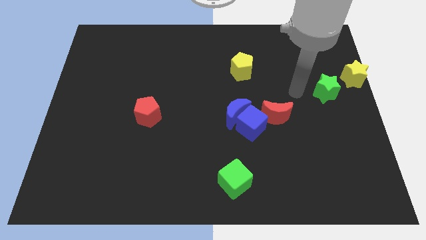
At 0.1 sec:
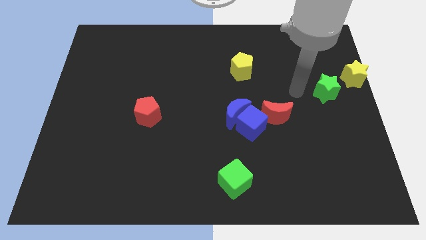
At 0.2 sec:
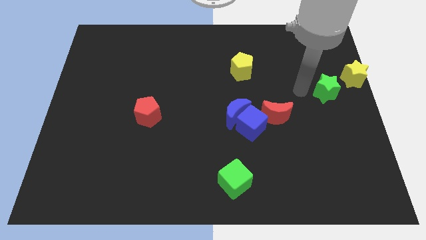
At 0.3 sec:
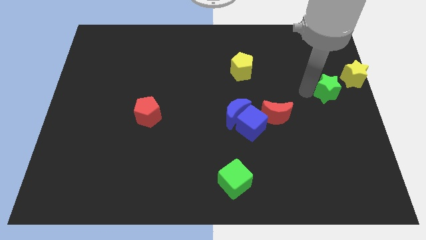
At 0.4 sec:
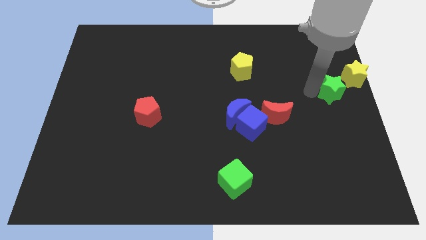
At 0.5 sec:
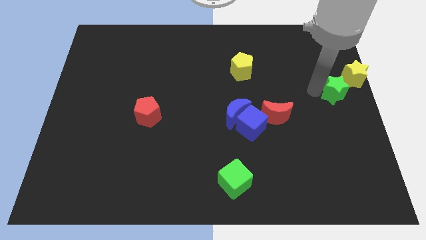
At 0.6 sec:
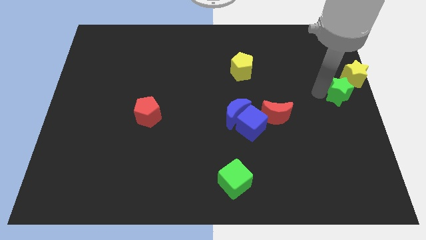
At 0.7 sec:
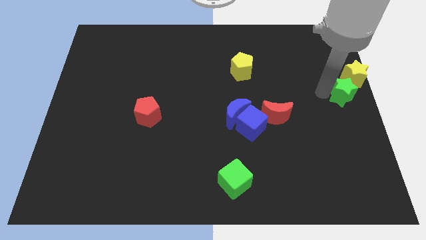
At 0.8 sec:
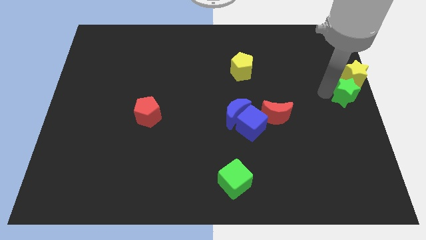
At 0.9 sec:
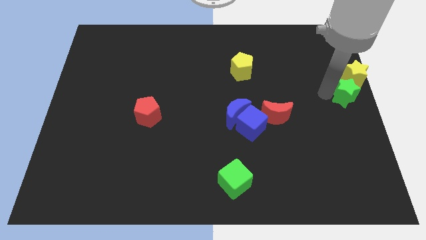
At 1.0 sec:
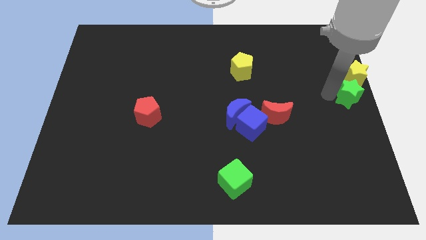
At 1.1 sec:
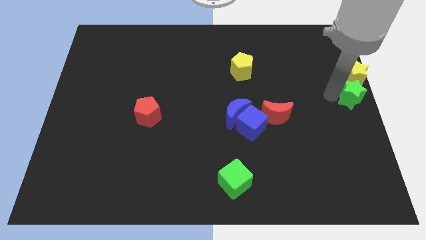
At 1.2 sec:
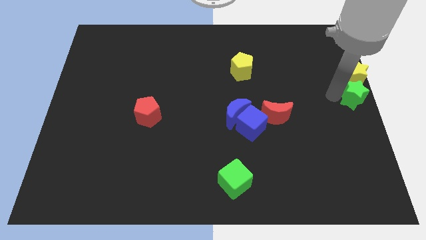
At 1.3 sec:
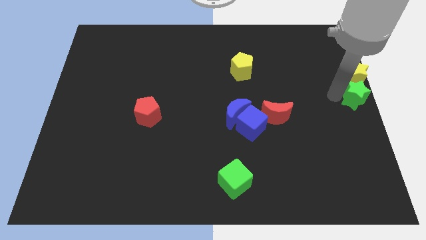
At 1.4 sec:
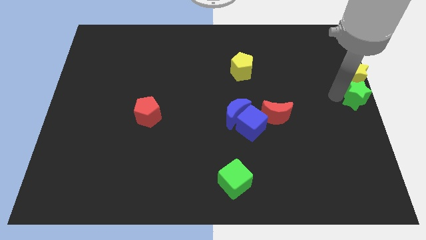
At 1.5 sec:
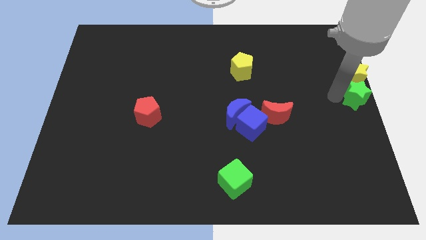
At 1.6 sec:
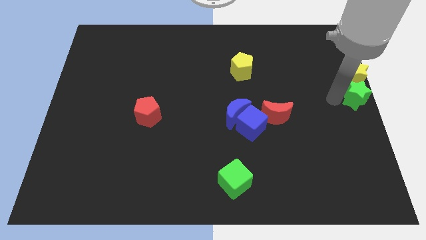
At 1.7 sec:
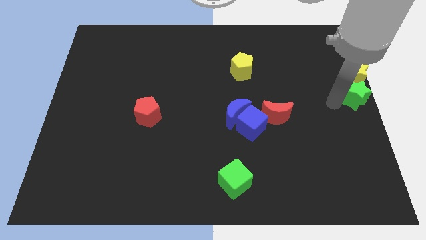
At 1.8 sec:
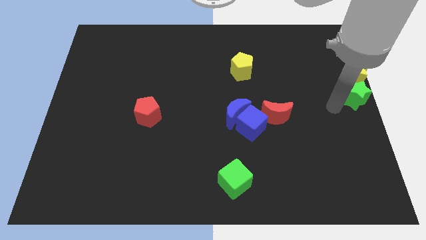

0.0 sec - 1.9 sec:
push the green star to the bottom of the yellow star

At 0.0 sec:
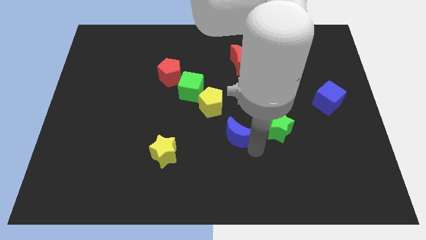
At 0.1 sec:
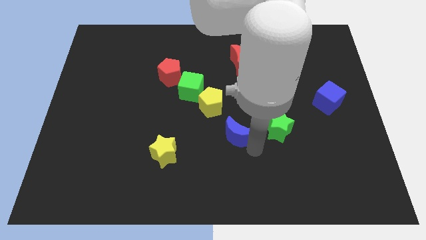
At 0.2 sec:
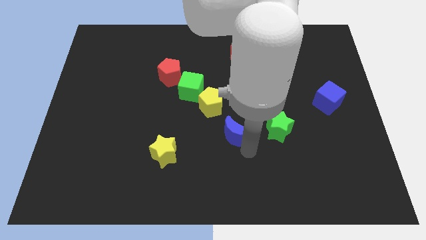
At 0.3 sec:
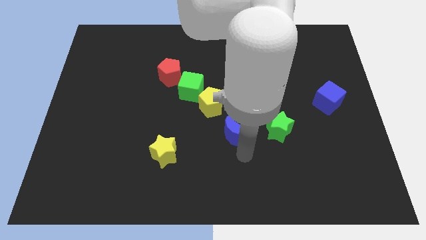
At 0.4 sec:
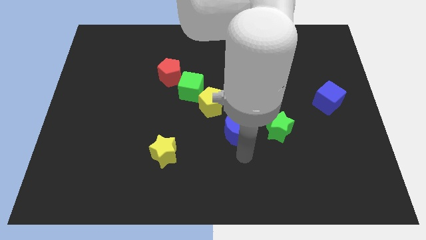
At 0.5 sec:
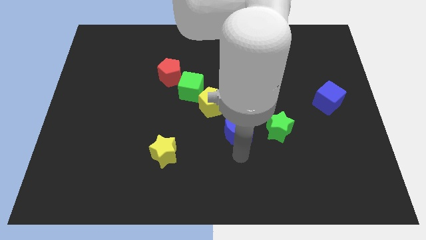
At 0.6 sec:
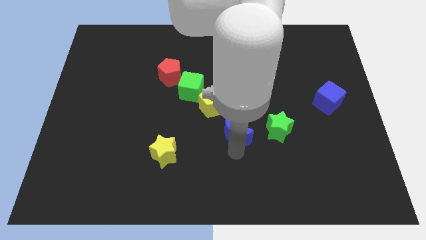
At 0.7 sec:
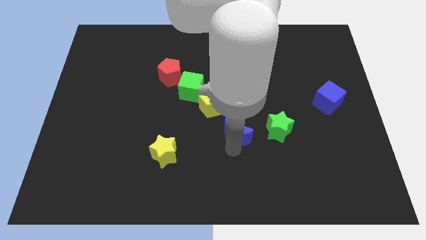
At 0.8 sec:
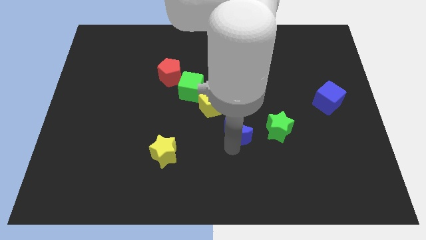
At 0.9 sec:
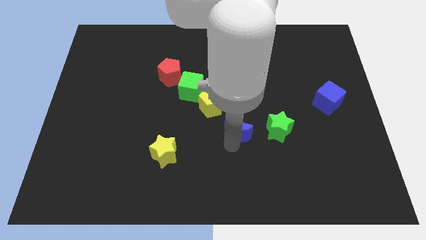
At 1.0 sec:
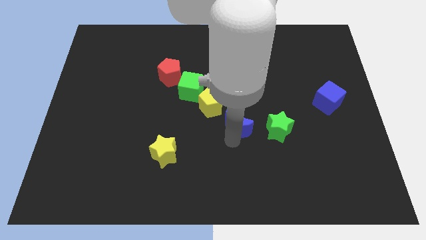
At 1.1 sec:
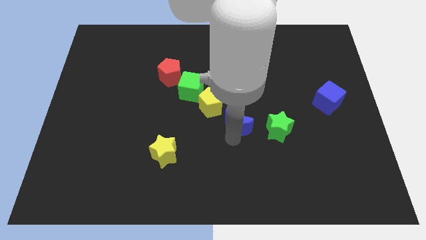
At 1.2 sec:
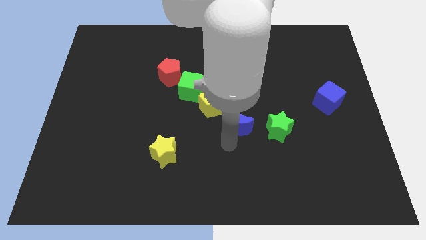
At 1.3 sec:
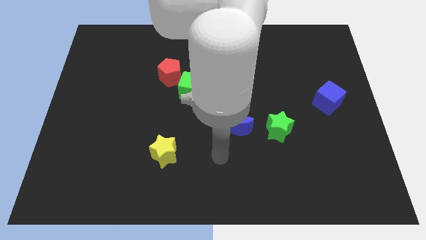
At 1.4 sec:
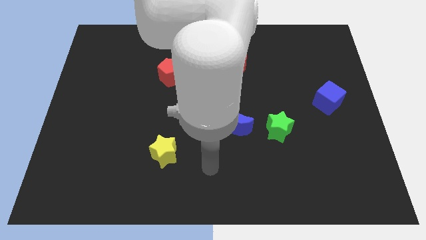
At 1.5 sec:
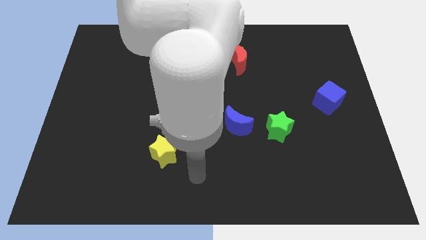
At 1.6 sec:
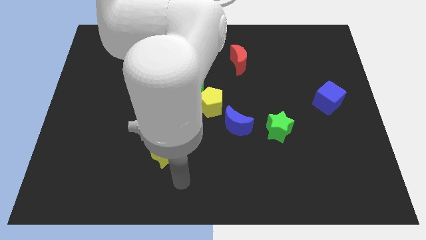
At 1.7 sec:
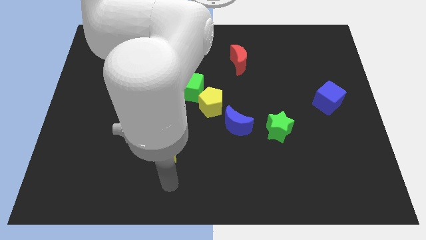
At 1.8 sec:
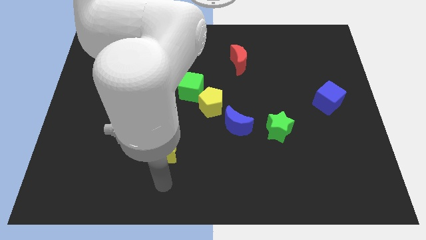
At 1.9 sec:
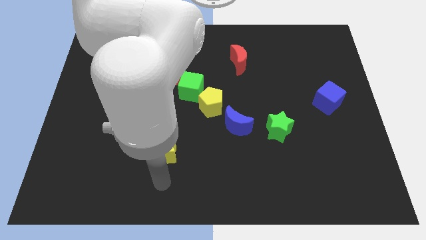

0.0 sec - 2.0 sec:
place the blue moon to the bottom right of the yellow pentagon

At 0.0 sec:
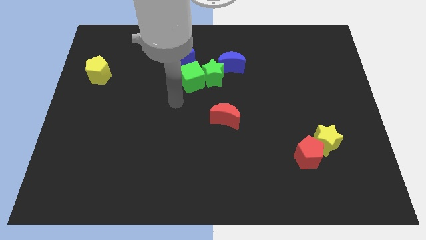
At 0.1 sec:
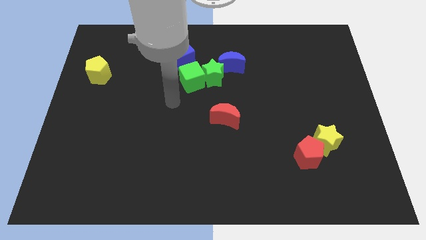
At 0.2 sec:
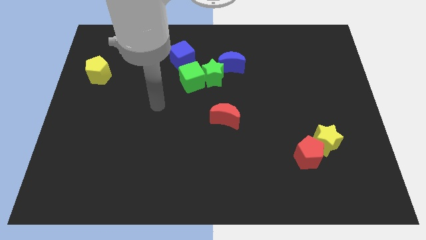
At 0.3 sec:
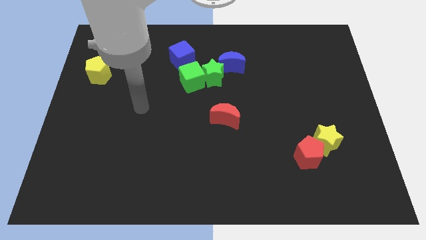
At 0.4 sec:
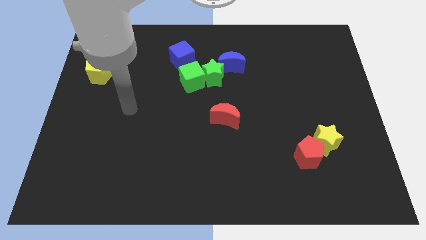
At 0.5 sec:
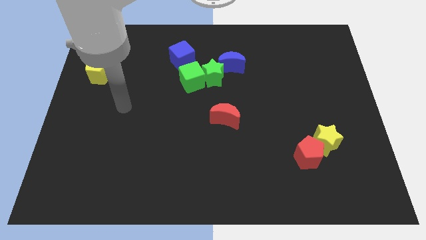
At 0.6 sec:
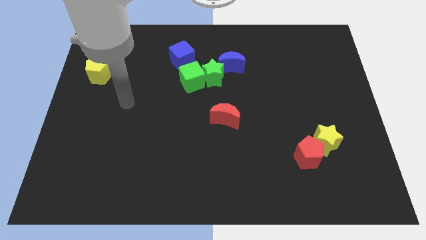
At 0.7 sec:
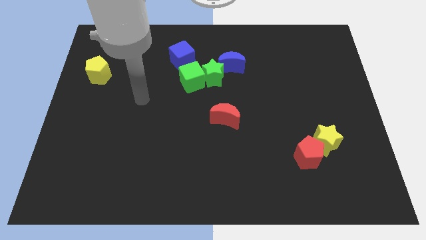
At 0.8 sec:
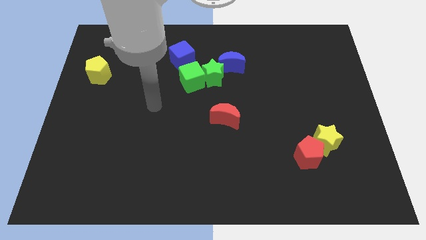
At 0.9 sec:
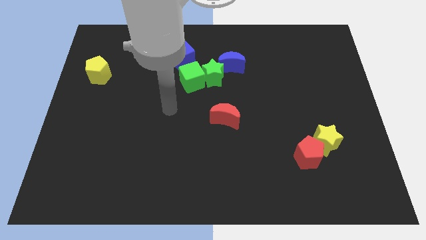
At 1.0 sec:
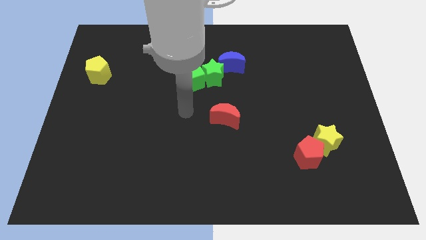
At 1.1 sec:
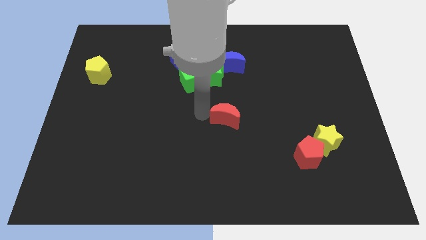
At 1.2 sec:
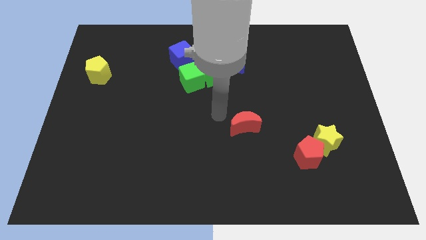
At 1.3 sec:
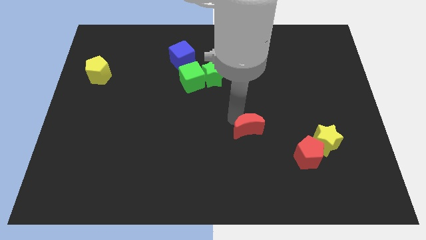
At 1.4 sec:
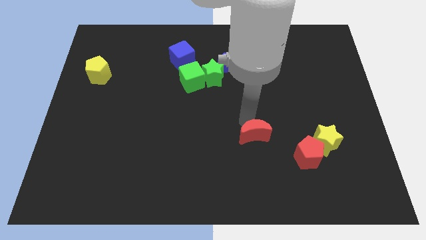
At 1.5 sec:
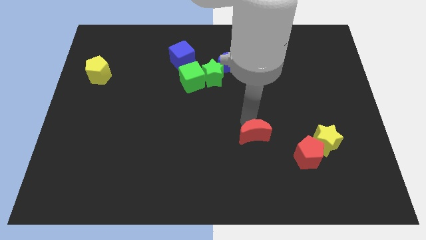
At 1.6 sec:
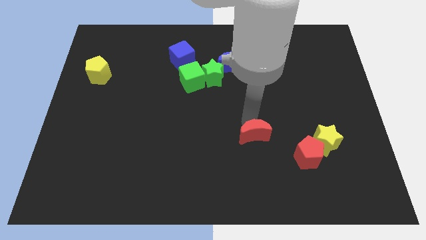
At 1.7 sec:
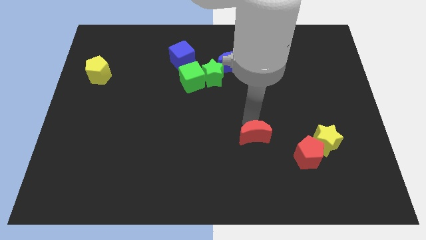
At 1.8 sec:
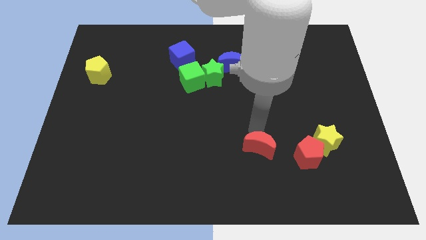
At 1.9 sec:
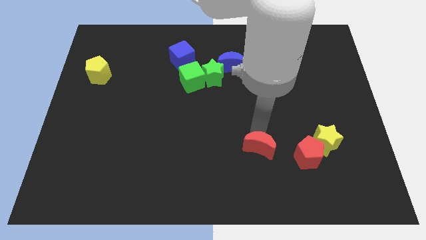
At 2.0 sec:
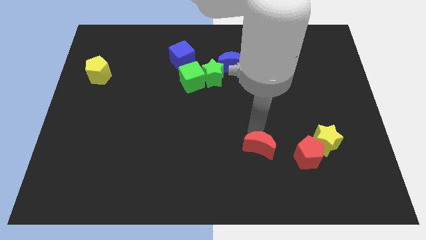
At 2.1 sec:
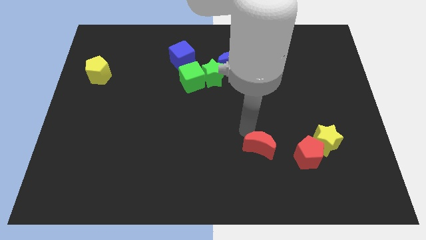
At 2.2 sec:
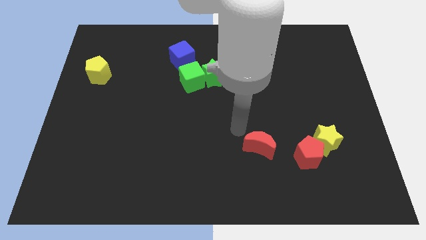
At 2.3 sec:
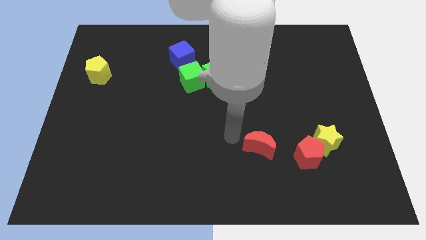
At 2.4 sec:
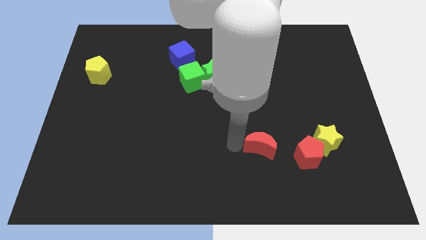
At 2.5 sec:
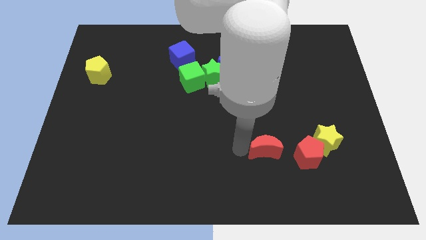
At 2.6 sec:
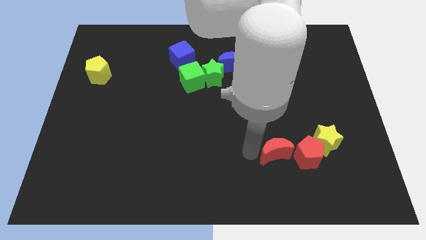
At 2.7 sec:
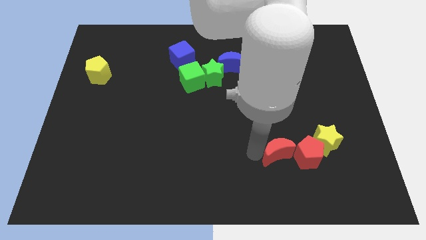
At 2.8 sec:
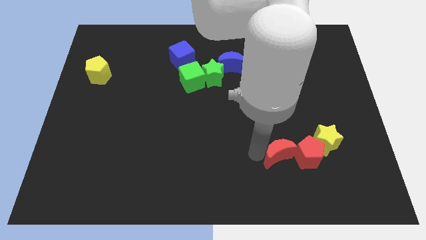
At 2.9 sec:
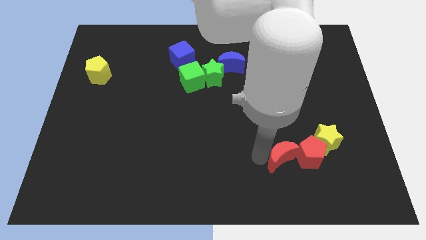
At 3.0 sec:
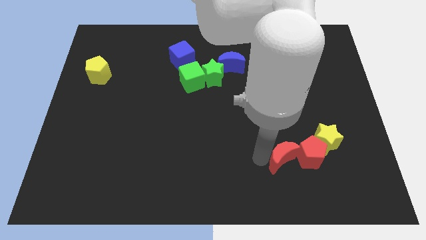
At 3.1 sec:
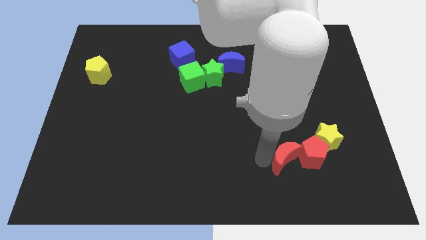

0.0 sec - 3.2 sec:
push the red moon into the red pentagon

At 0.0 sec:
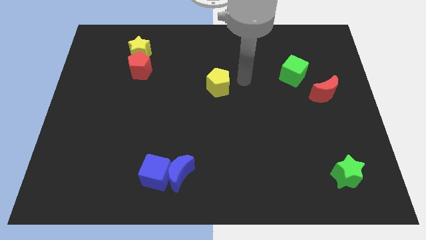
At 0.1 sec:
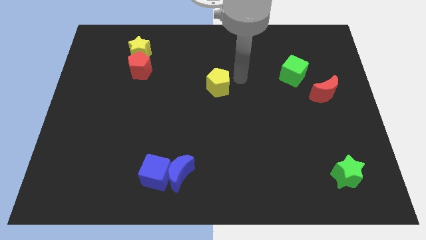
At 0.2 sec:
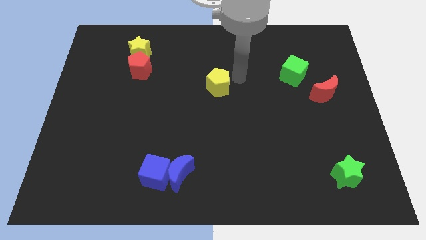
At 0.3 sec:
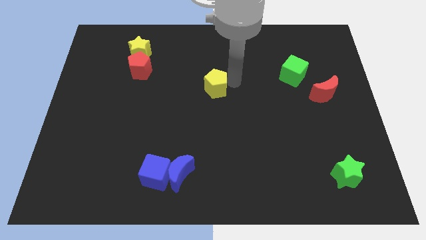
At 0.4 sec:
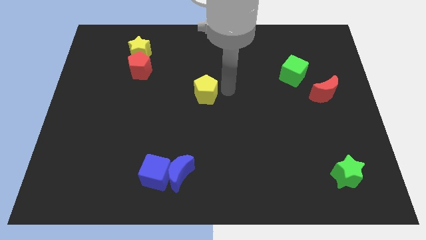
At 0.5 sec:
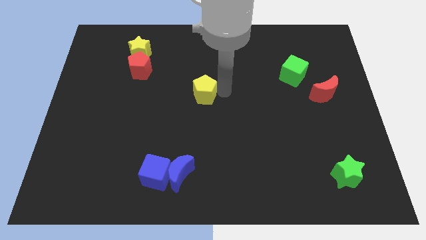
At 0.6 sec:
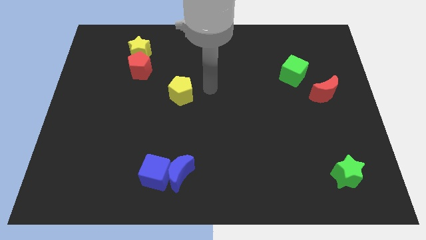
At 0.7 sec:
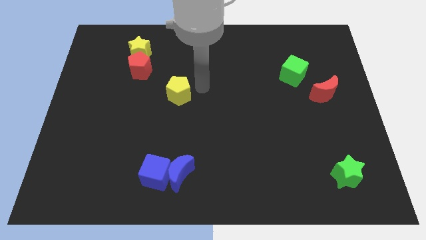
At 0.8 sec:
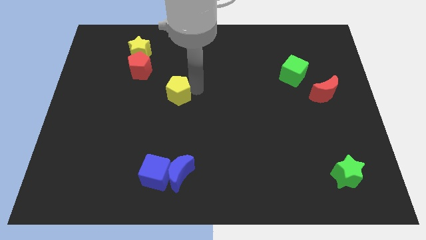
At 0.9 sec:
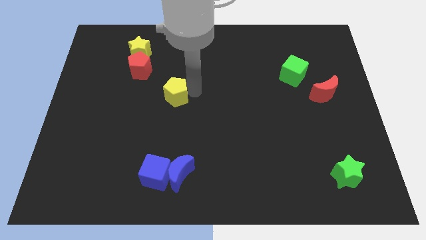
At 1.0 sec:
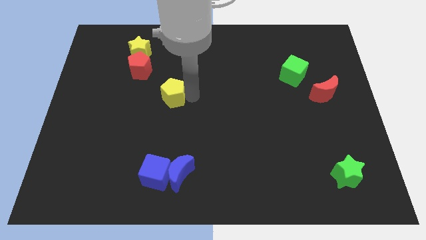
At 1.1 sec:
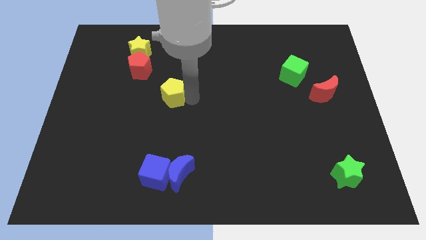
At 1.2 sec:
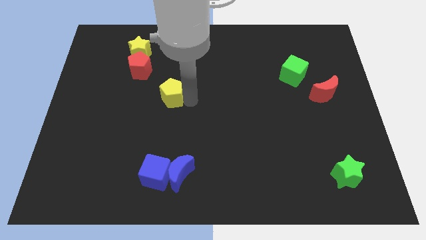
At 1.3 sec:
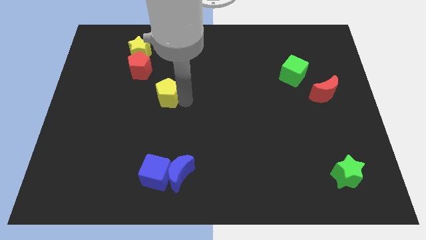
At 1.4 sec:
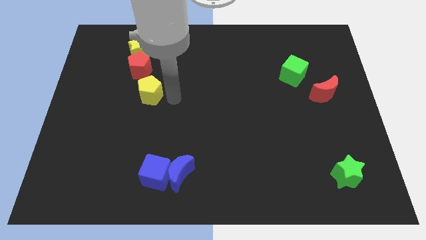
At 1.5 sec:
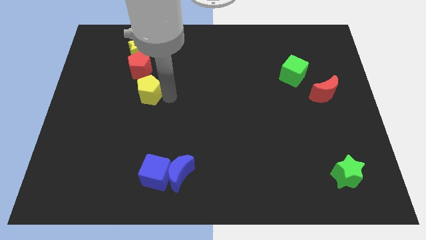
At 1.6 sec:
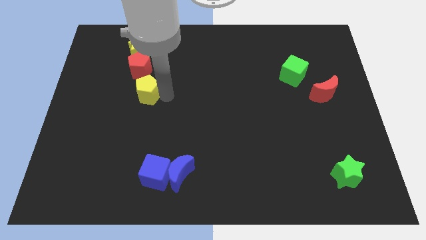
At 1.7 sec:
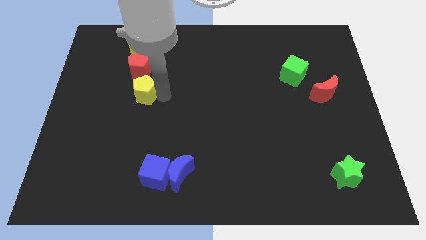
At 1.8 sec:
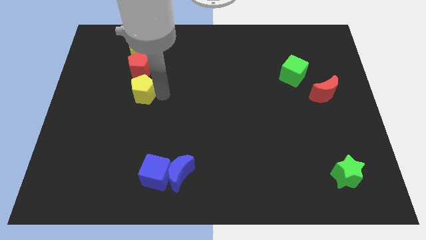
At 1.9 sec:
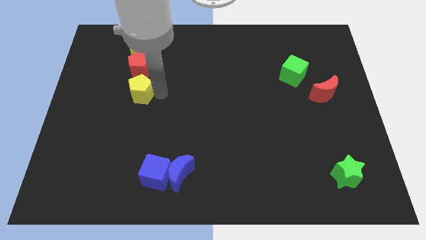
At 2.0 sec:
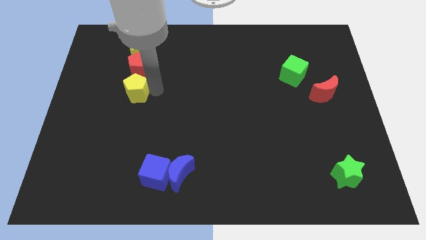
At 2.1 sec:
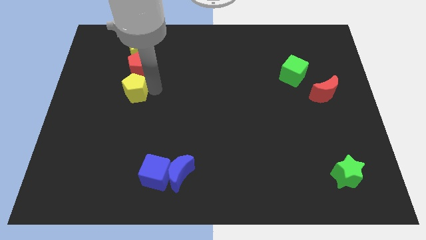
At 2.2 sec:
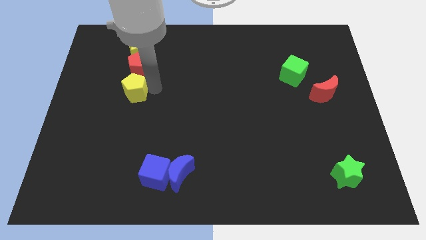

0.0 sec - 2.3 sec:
move the yellow pentagon below the red pentagon
